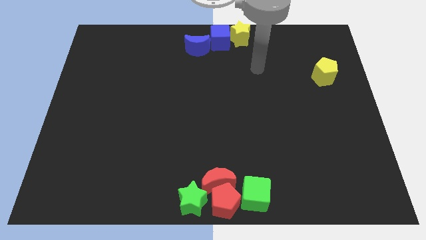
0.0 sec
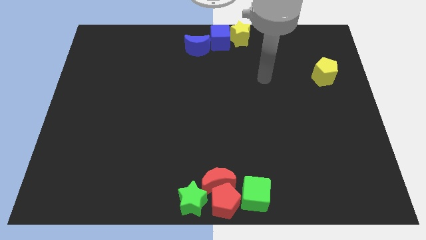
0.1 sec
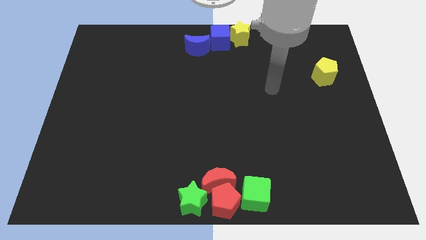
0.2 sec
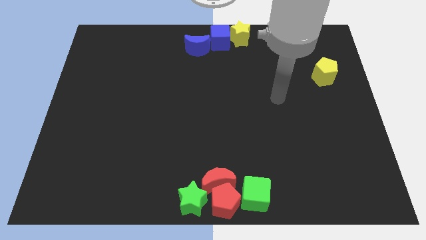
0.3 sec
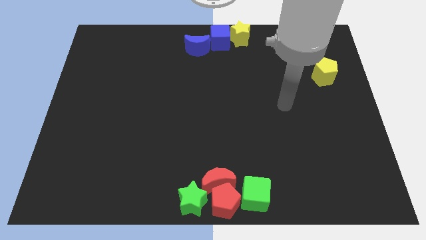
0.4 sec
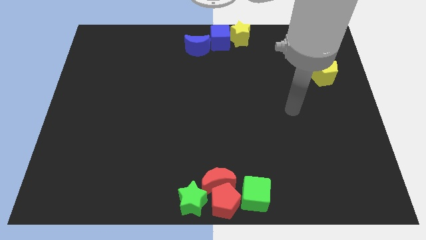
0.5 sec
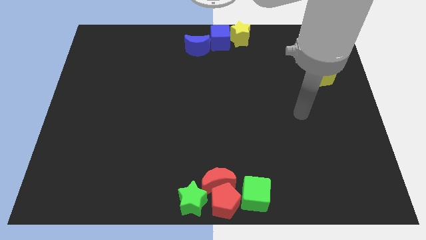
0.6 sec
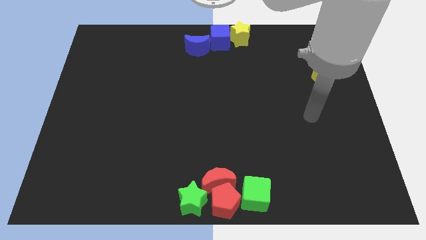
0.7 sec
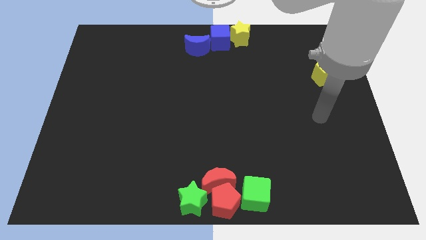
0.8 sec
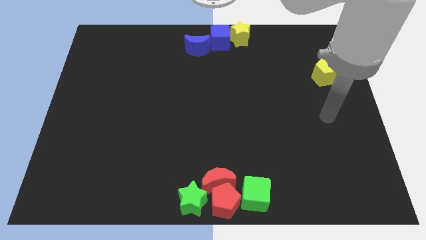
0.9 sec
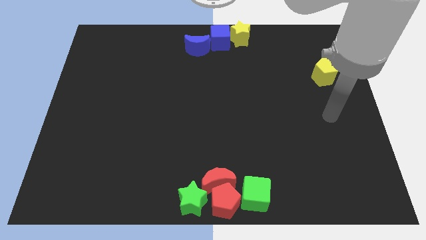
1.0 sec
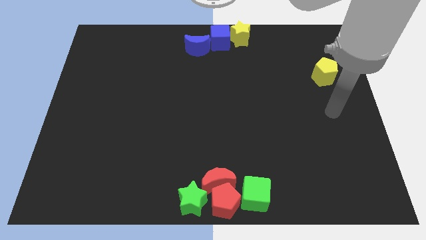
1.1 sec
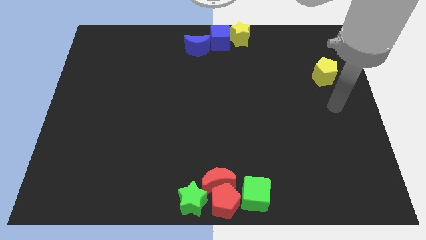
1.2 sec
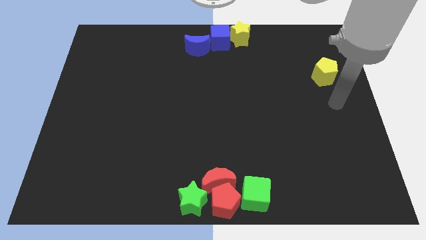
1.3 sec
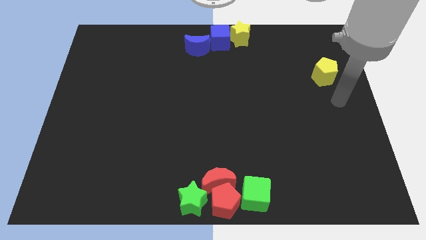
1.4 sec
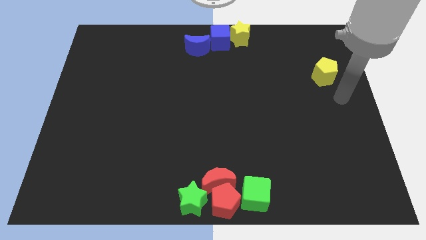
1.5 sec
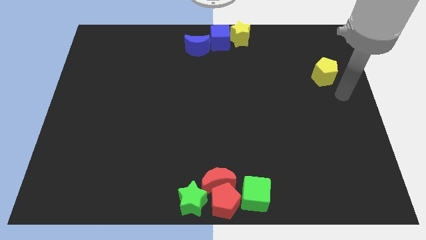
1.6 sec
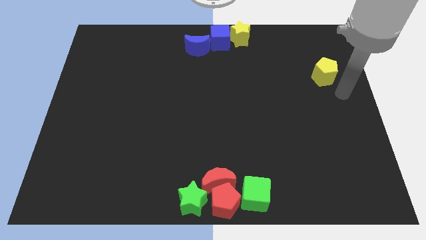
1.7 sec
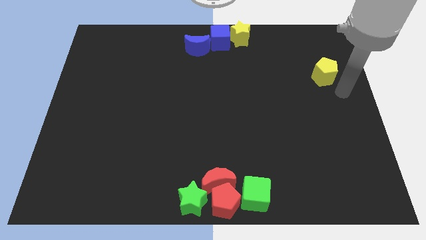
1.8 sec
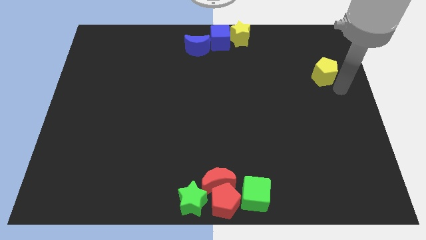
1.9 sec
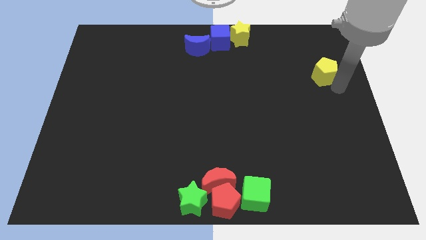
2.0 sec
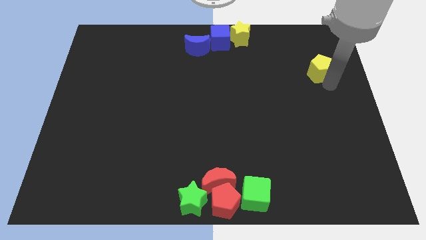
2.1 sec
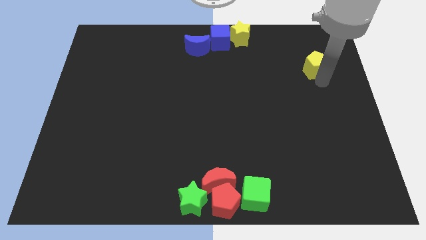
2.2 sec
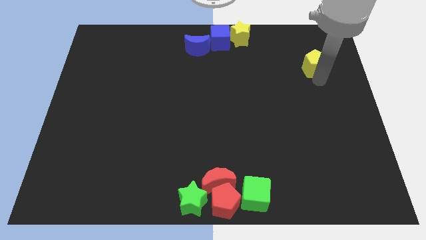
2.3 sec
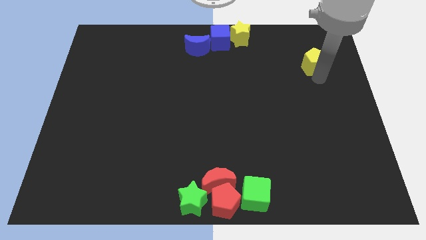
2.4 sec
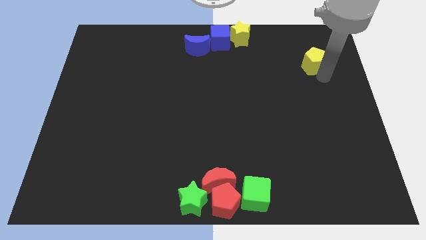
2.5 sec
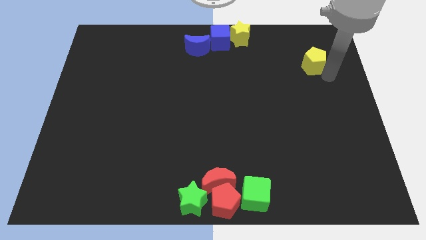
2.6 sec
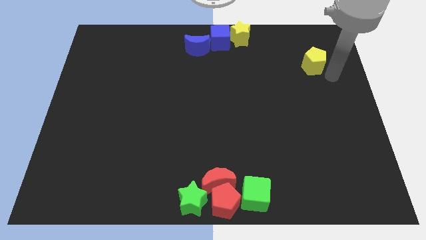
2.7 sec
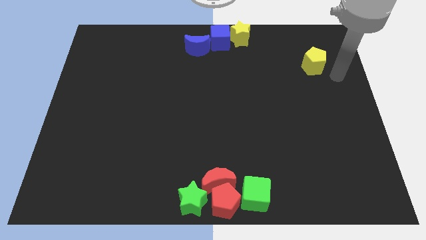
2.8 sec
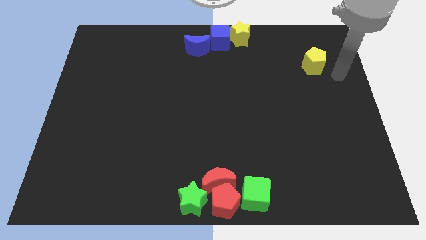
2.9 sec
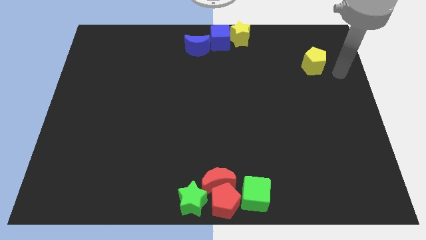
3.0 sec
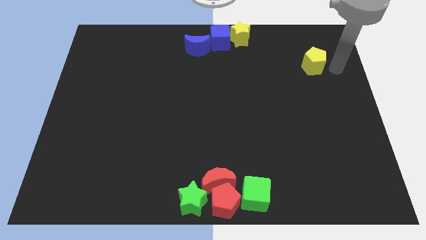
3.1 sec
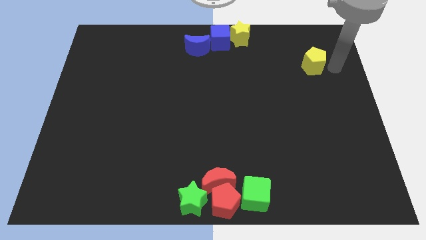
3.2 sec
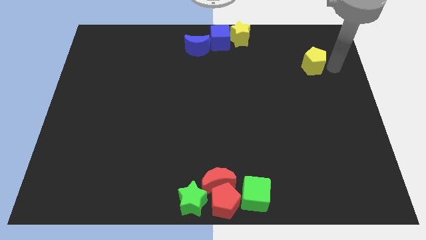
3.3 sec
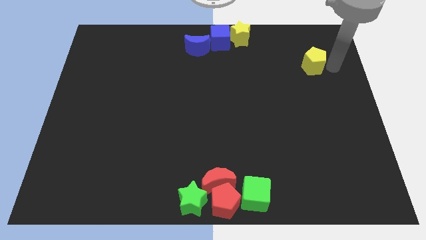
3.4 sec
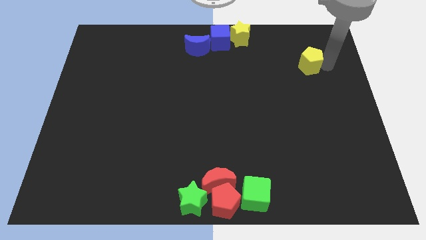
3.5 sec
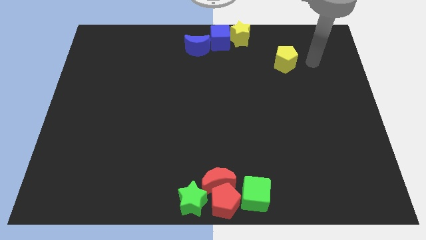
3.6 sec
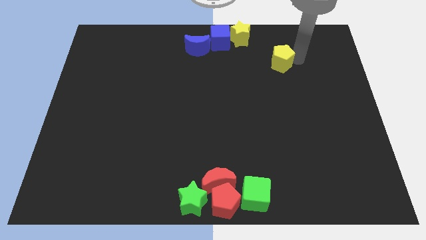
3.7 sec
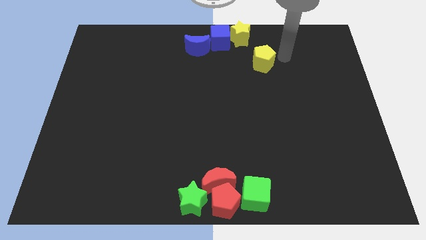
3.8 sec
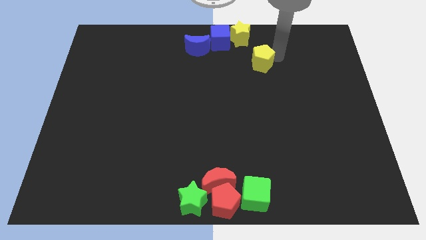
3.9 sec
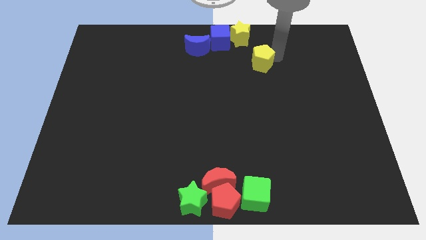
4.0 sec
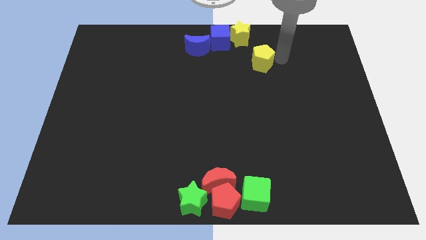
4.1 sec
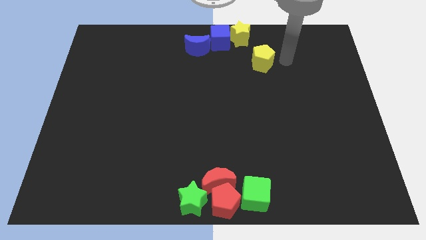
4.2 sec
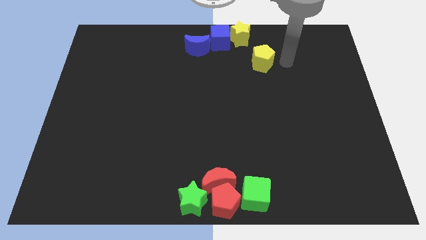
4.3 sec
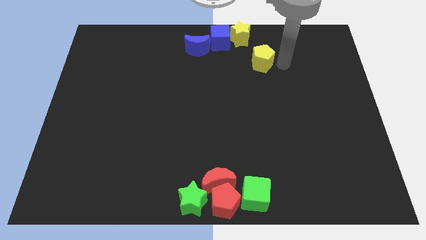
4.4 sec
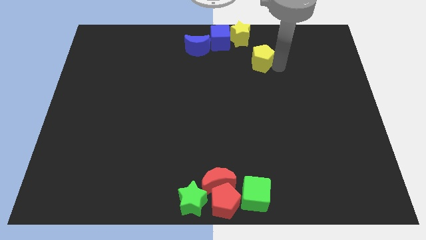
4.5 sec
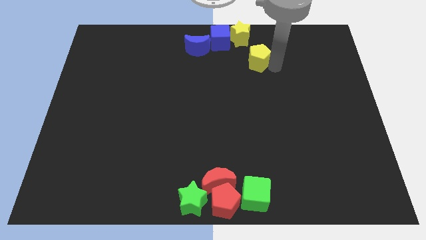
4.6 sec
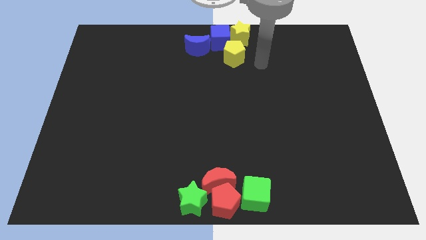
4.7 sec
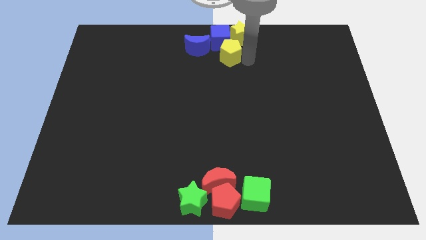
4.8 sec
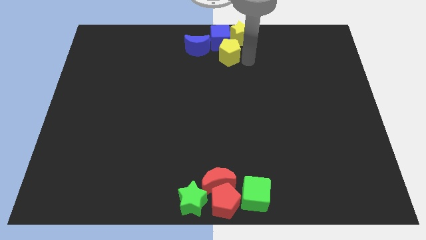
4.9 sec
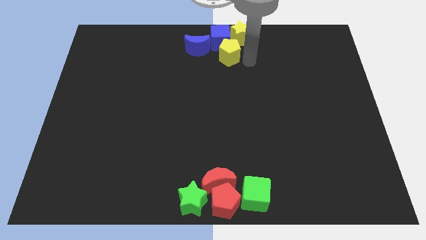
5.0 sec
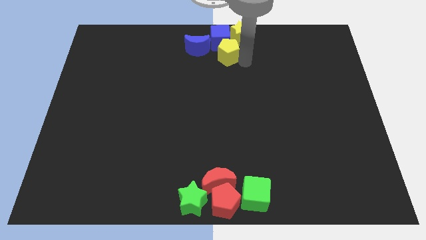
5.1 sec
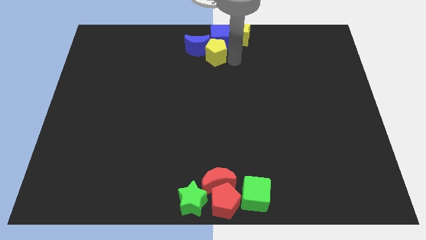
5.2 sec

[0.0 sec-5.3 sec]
push the yellow star parallel to the blue cube

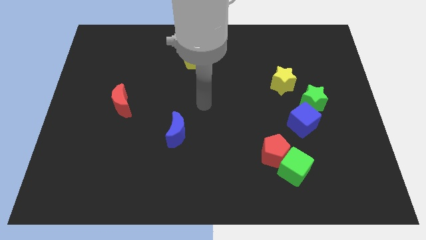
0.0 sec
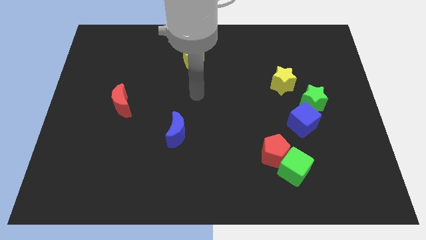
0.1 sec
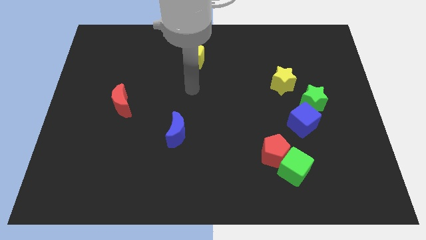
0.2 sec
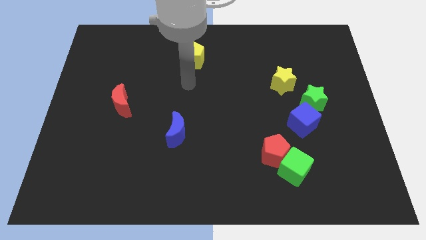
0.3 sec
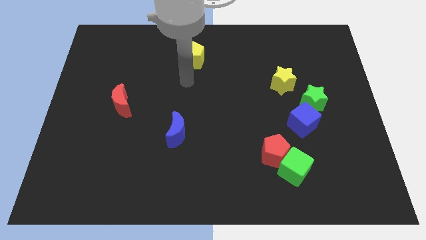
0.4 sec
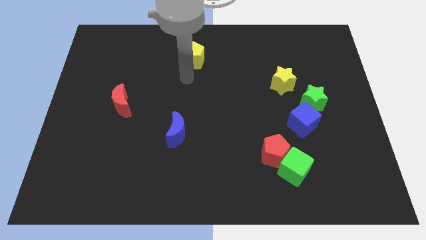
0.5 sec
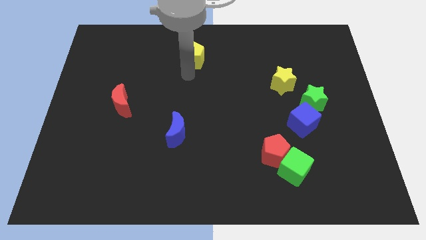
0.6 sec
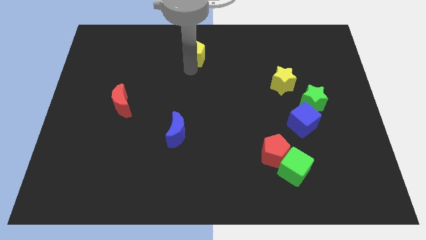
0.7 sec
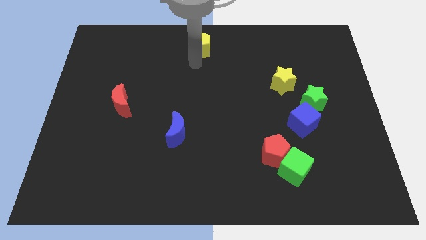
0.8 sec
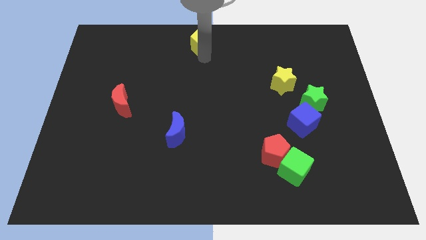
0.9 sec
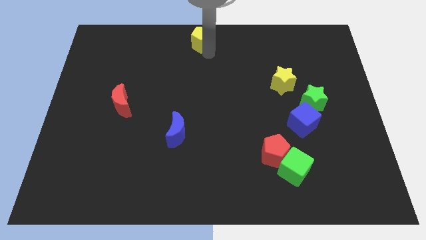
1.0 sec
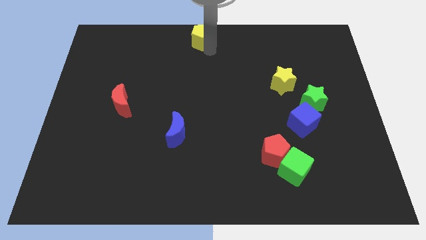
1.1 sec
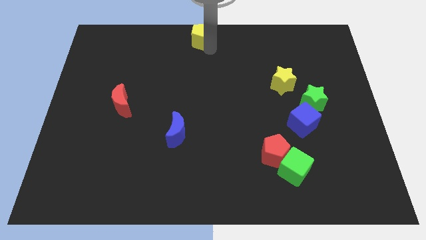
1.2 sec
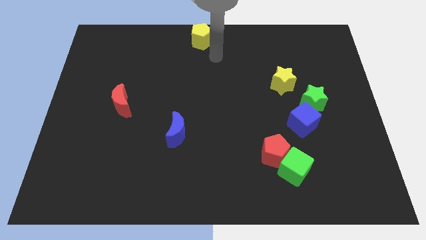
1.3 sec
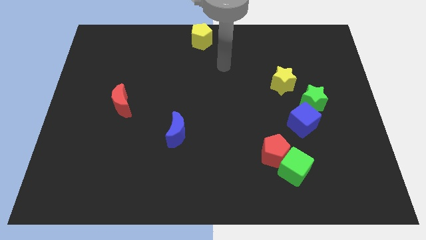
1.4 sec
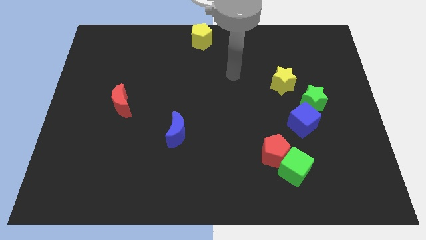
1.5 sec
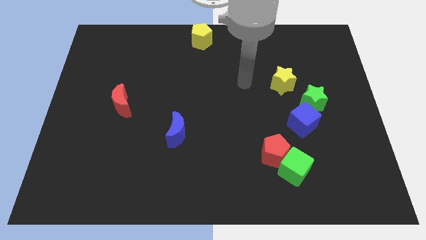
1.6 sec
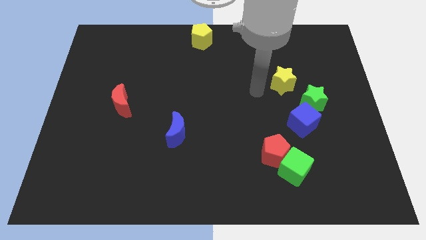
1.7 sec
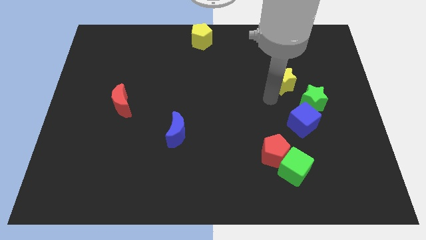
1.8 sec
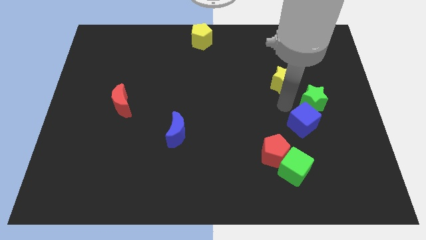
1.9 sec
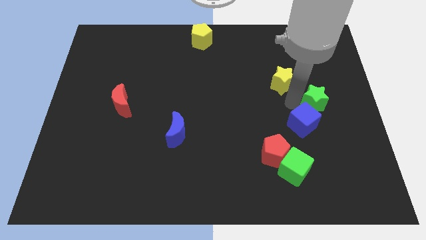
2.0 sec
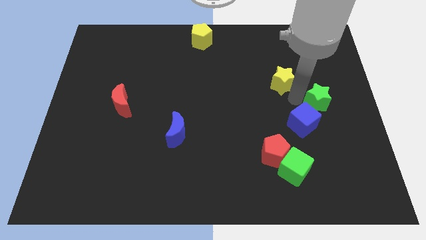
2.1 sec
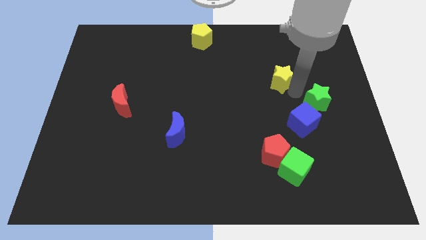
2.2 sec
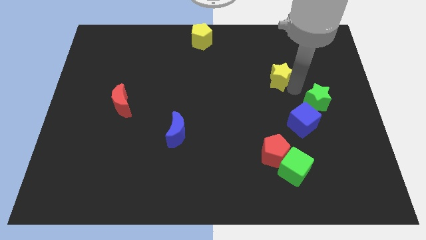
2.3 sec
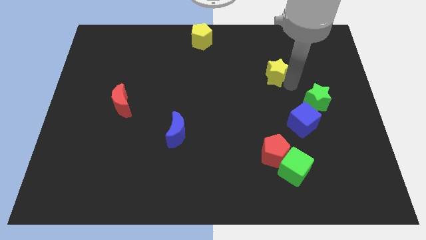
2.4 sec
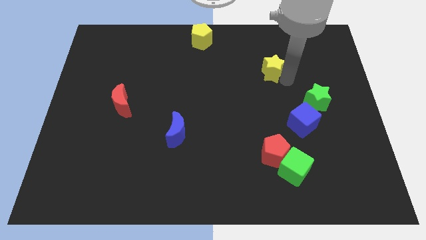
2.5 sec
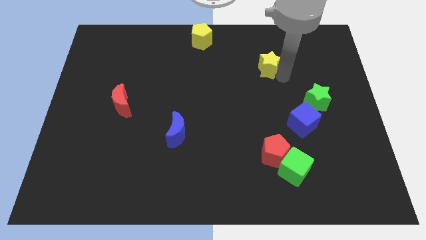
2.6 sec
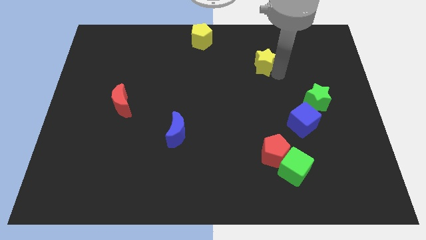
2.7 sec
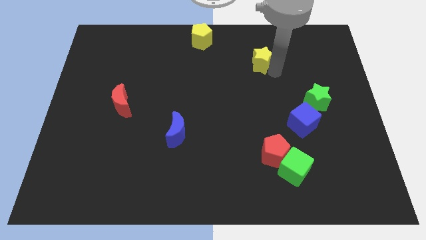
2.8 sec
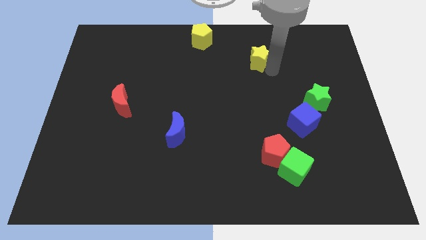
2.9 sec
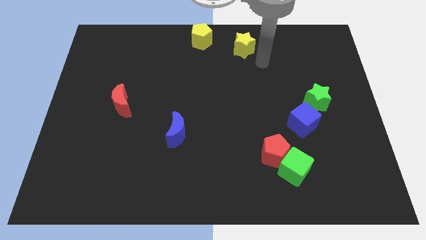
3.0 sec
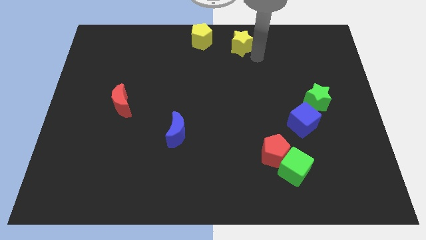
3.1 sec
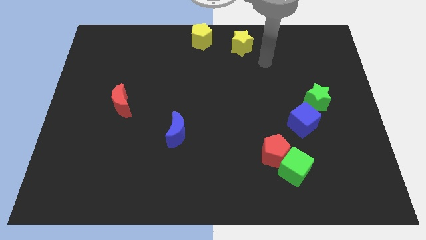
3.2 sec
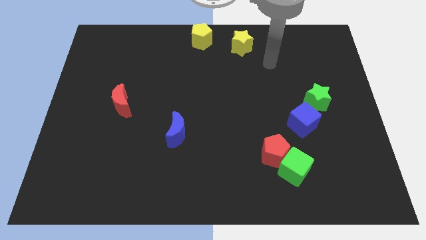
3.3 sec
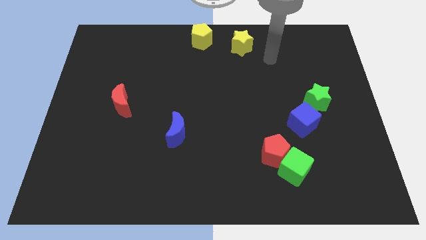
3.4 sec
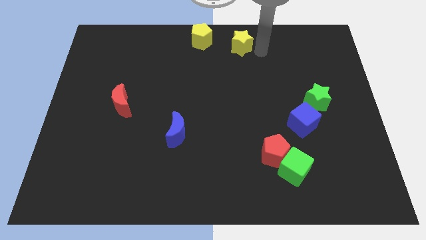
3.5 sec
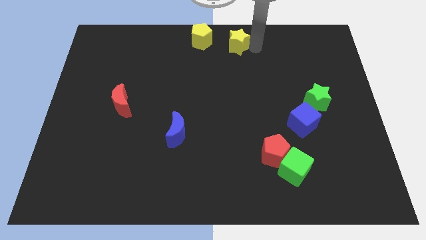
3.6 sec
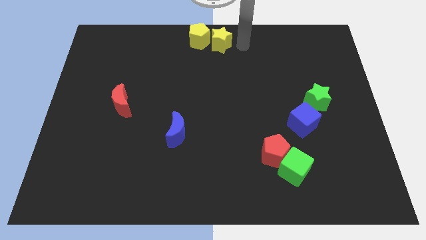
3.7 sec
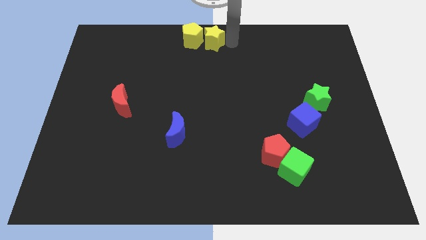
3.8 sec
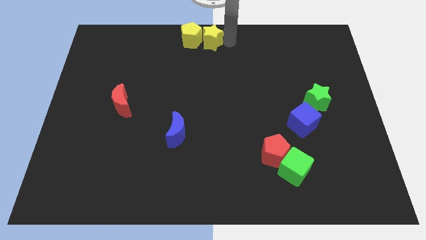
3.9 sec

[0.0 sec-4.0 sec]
push the yellow blocks to the top center of the board
